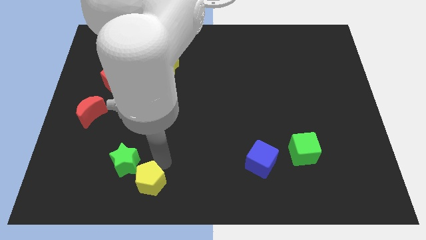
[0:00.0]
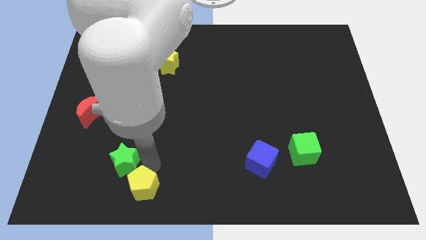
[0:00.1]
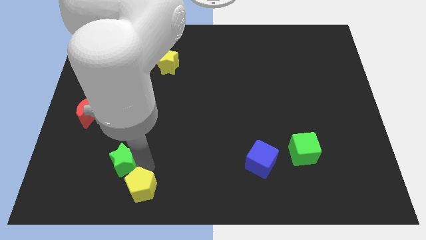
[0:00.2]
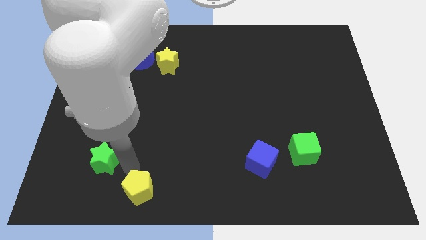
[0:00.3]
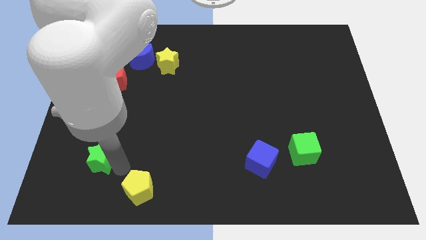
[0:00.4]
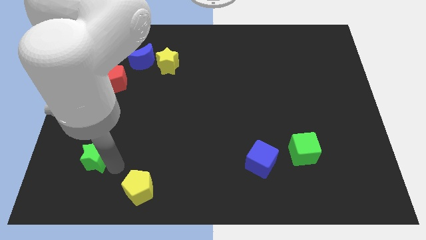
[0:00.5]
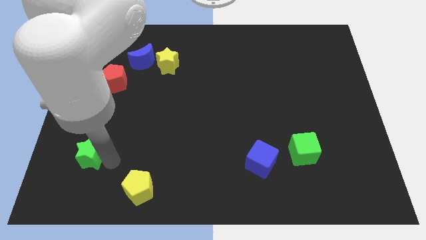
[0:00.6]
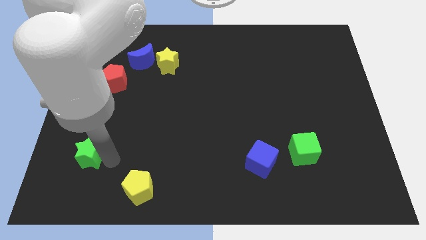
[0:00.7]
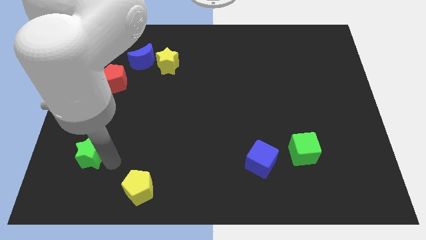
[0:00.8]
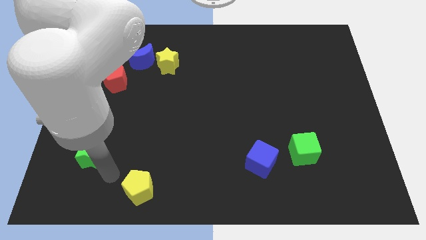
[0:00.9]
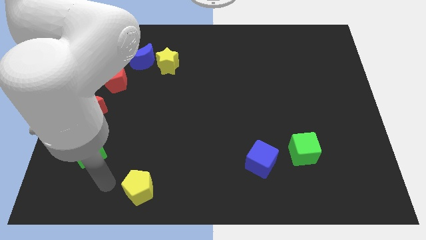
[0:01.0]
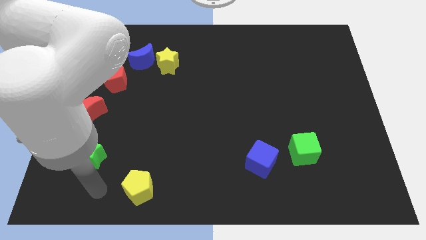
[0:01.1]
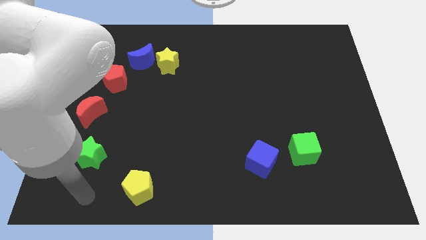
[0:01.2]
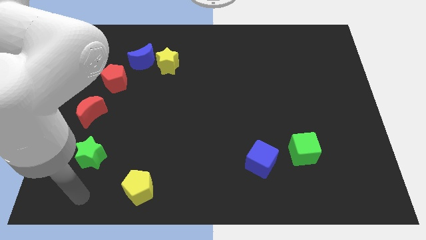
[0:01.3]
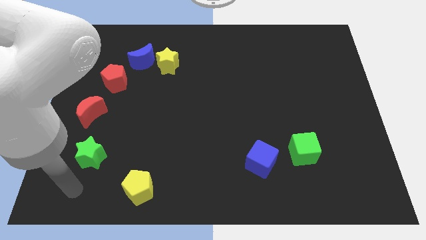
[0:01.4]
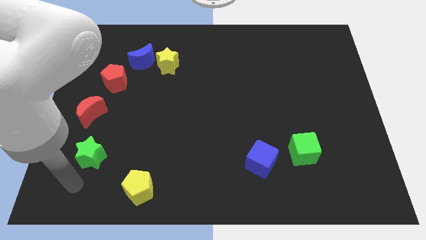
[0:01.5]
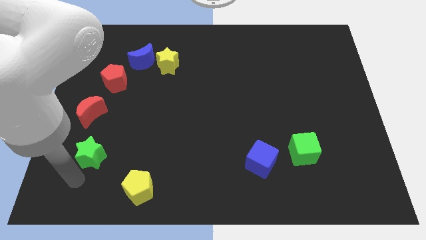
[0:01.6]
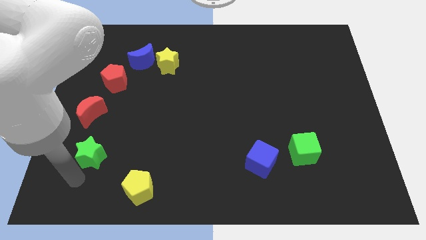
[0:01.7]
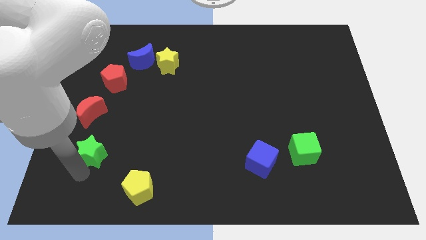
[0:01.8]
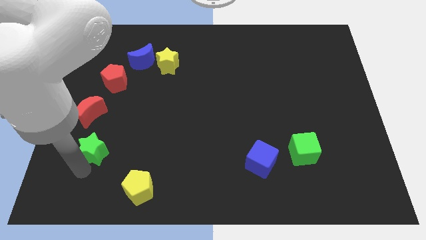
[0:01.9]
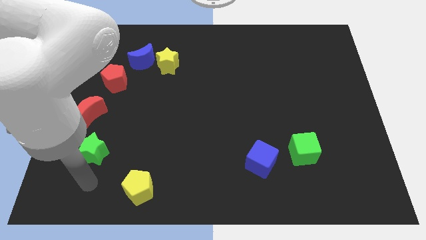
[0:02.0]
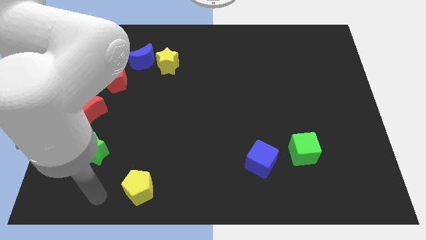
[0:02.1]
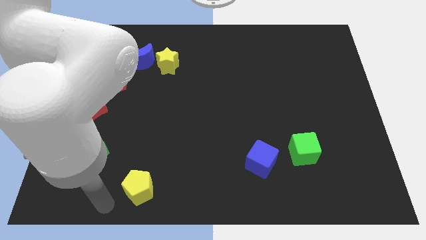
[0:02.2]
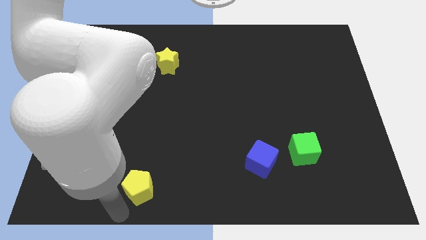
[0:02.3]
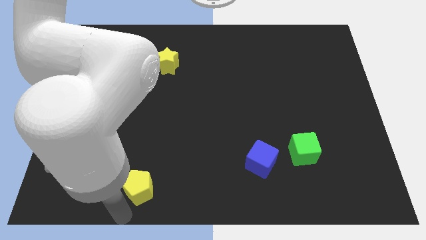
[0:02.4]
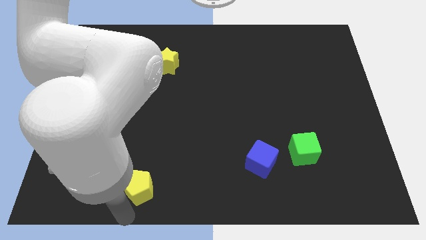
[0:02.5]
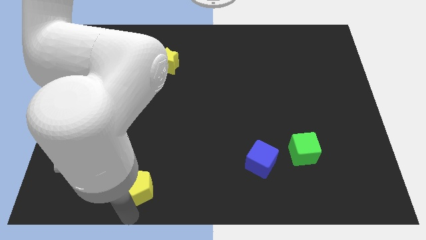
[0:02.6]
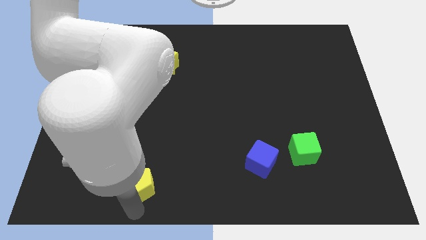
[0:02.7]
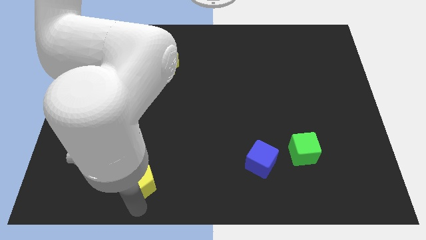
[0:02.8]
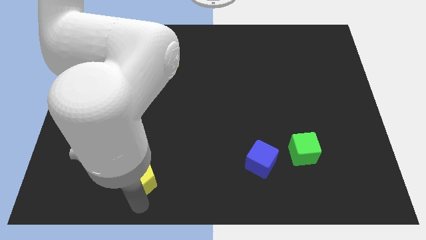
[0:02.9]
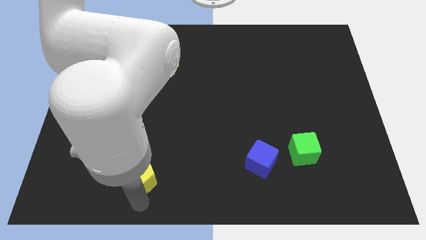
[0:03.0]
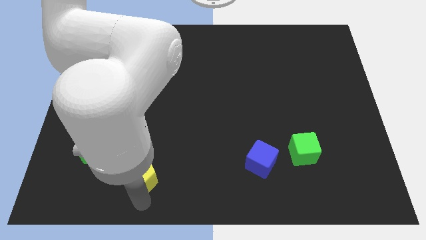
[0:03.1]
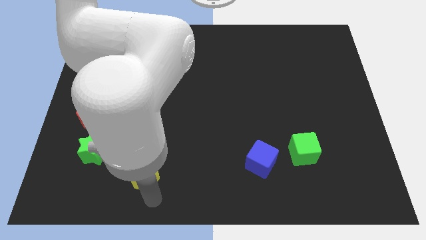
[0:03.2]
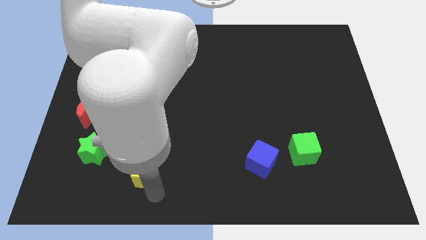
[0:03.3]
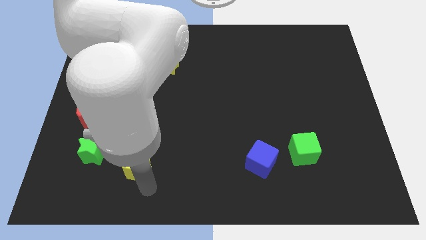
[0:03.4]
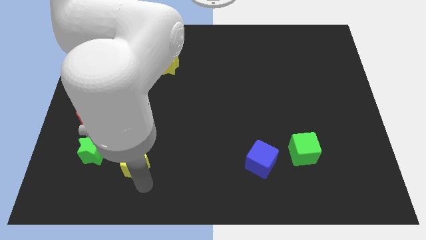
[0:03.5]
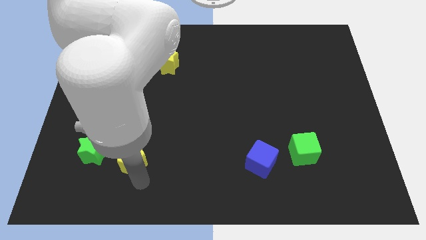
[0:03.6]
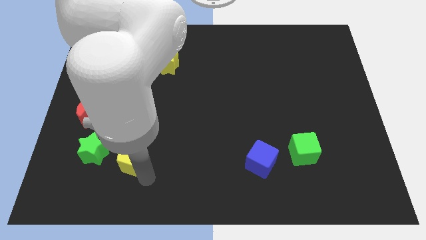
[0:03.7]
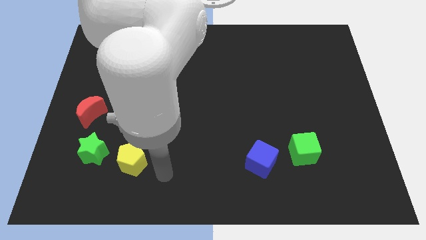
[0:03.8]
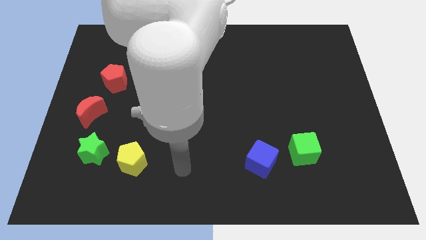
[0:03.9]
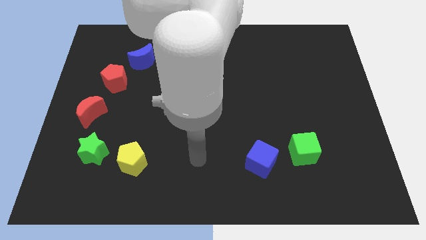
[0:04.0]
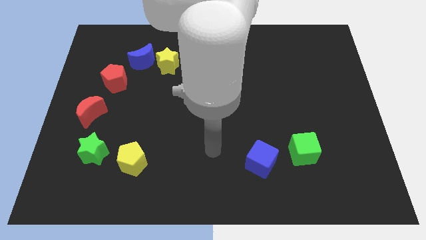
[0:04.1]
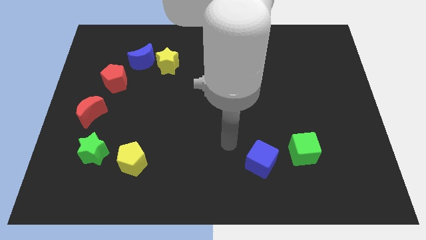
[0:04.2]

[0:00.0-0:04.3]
push the green star and yellow pentagon towards the top side of the board

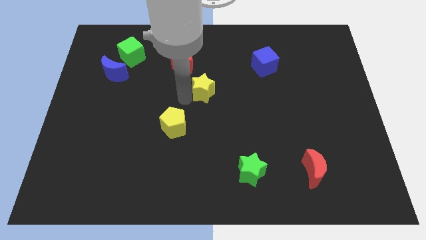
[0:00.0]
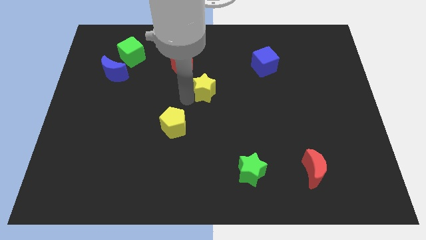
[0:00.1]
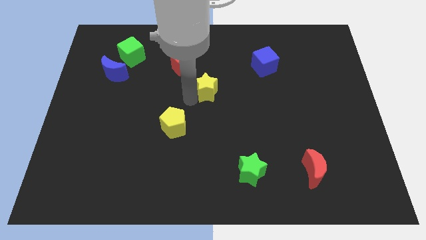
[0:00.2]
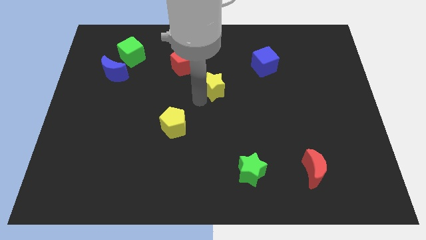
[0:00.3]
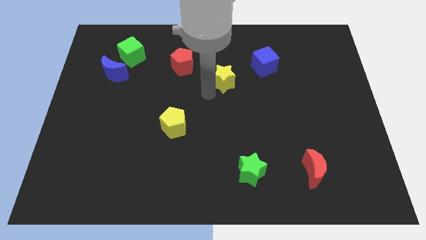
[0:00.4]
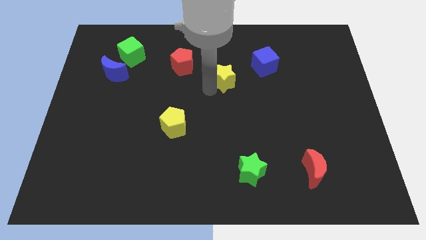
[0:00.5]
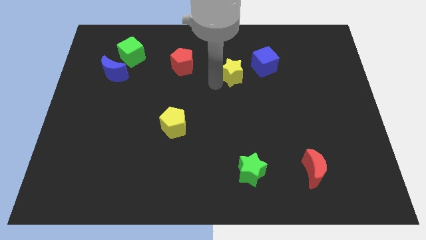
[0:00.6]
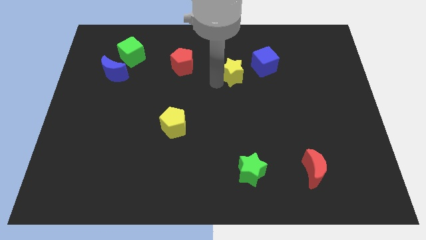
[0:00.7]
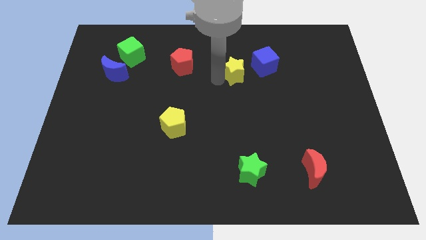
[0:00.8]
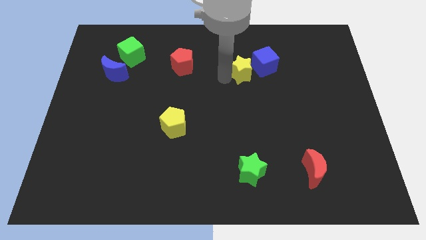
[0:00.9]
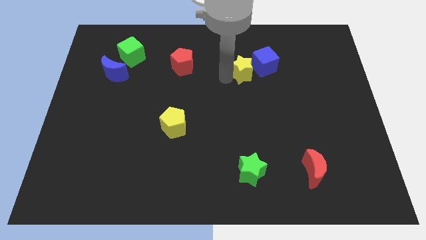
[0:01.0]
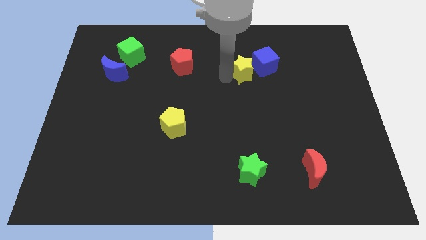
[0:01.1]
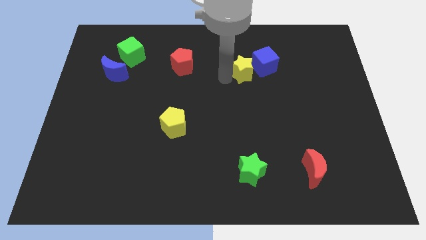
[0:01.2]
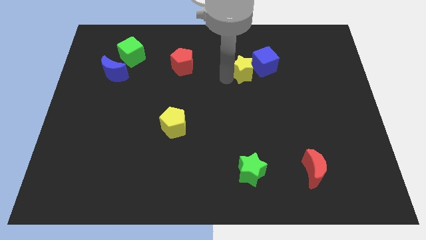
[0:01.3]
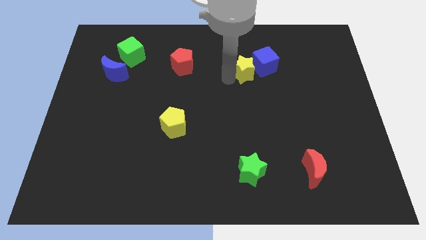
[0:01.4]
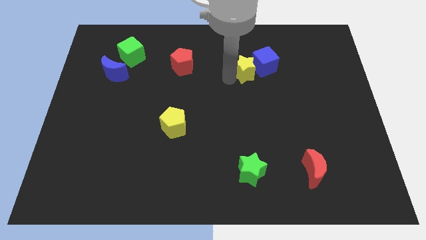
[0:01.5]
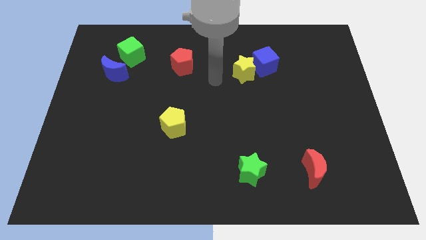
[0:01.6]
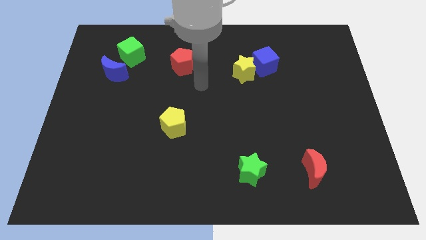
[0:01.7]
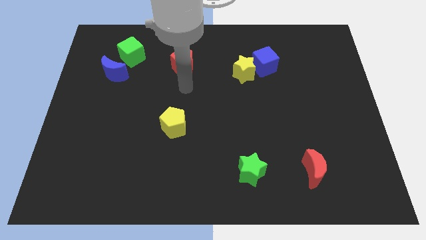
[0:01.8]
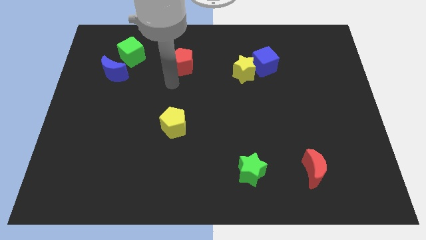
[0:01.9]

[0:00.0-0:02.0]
place the yellow star close to the blue cube

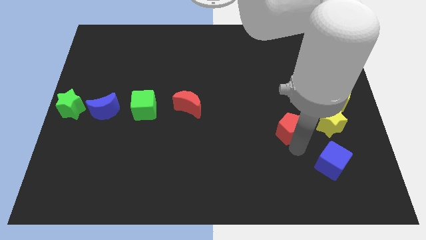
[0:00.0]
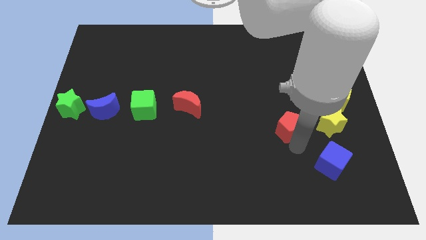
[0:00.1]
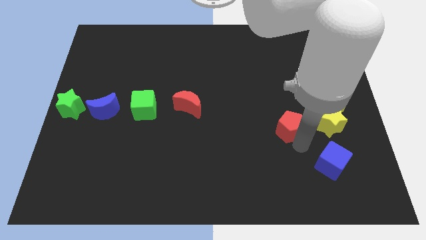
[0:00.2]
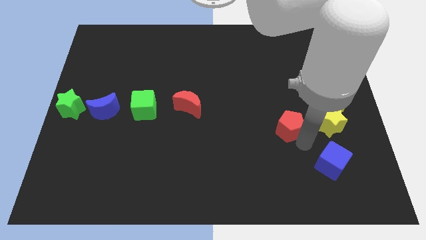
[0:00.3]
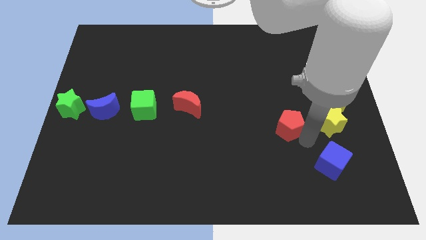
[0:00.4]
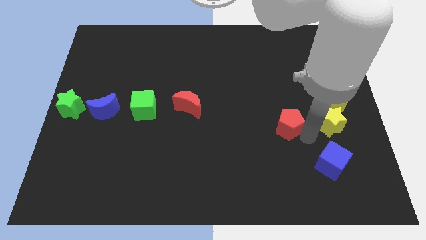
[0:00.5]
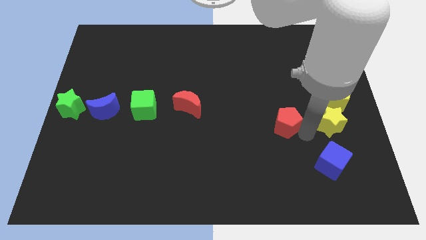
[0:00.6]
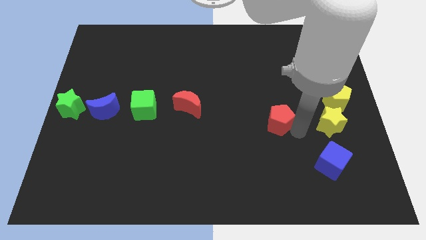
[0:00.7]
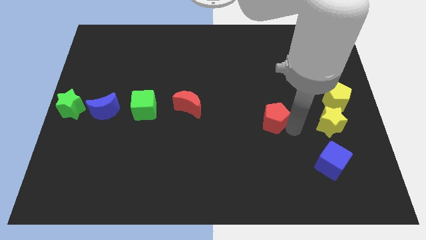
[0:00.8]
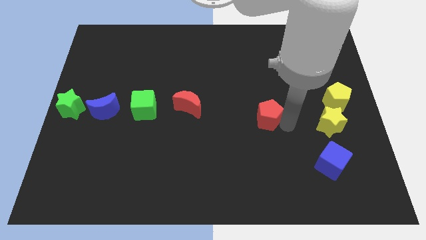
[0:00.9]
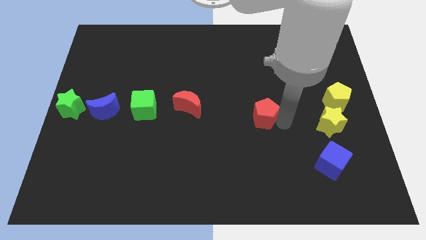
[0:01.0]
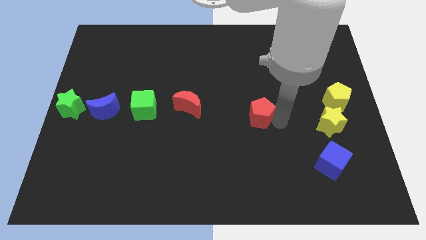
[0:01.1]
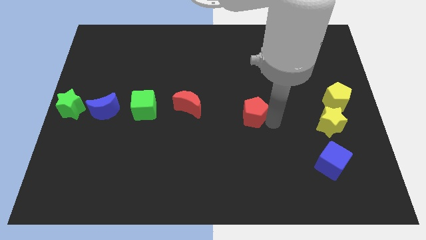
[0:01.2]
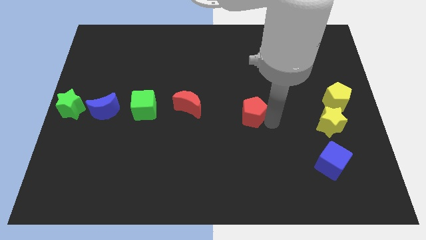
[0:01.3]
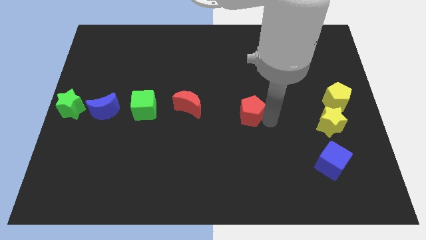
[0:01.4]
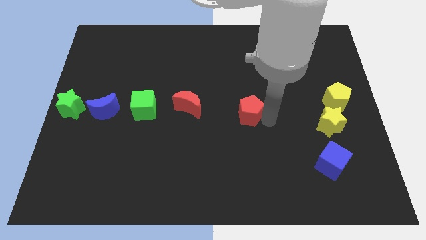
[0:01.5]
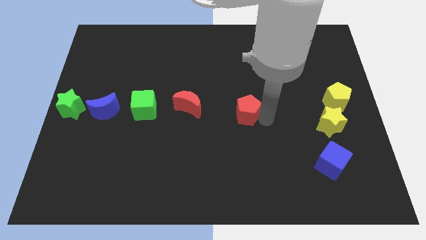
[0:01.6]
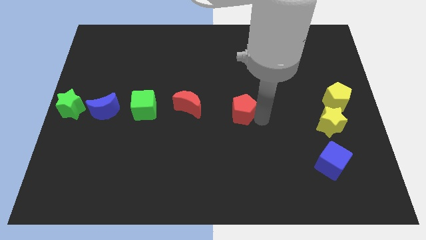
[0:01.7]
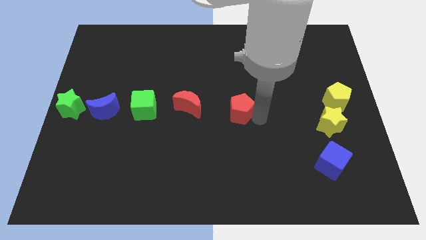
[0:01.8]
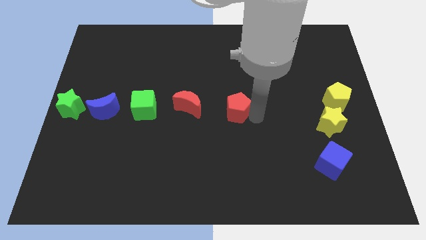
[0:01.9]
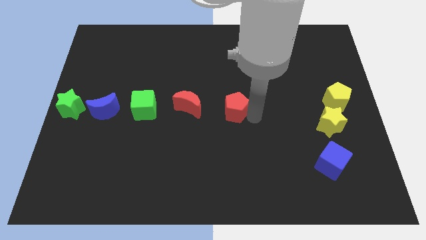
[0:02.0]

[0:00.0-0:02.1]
place the red pentagon to the right of red crescent

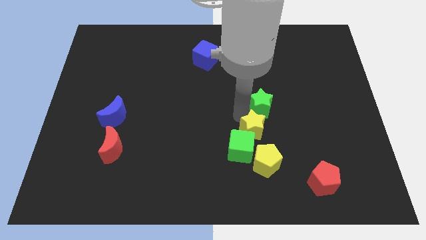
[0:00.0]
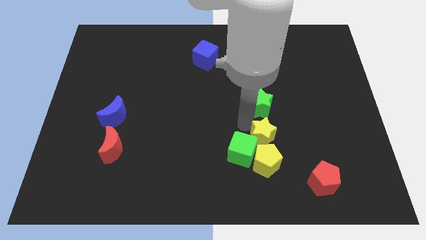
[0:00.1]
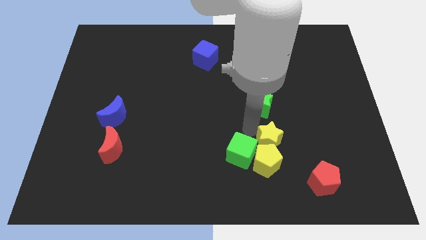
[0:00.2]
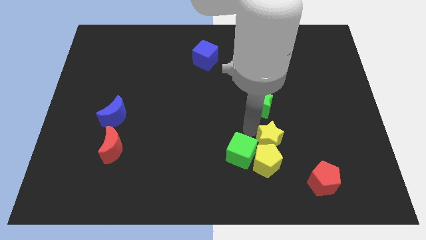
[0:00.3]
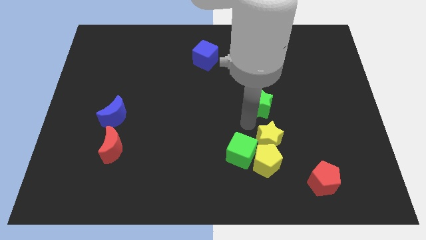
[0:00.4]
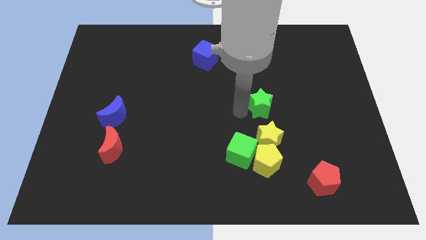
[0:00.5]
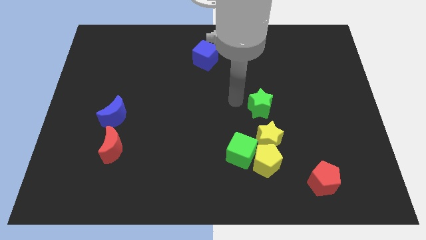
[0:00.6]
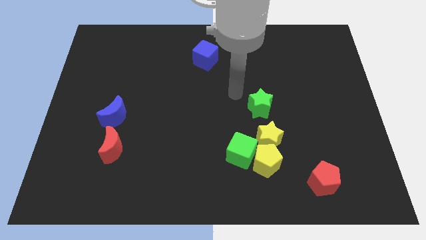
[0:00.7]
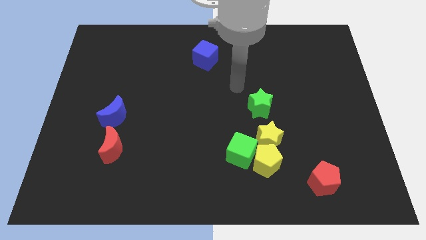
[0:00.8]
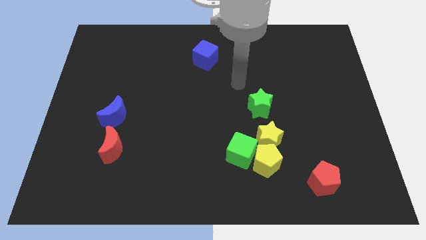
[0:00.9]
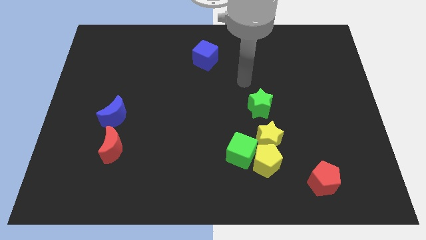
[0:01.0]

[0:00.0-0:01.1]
move yellow star on top of yellow pentagon
